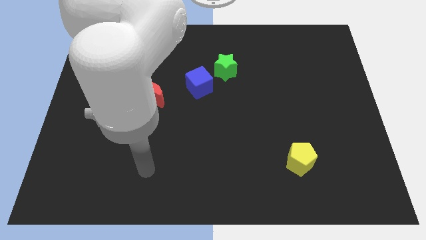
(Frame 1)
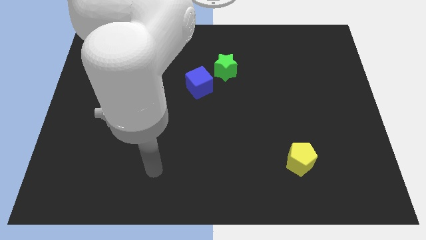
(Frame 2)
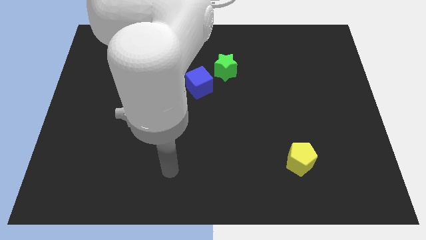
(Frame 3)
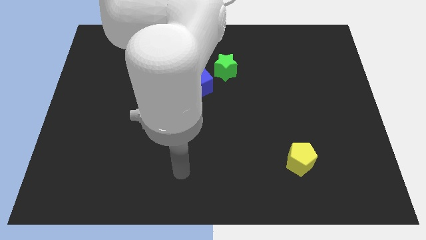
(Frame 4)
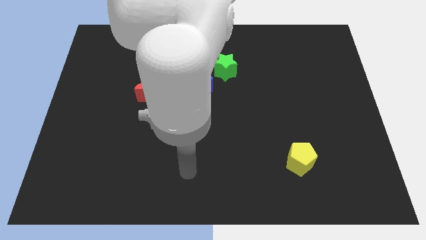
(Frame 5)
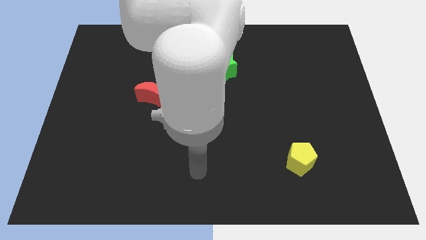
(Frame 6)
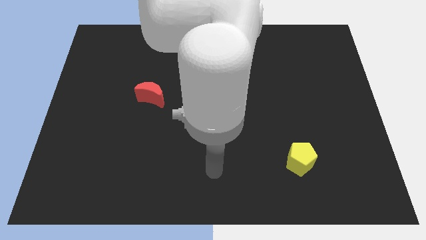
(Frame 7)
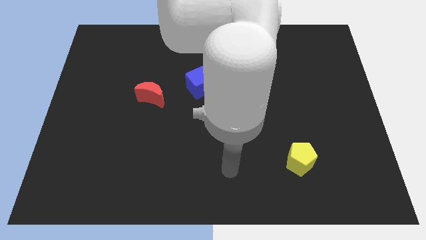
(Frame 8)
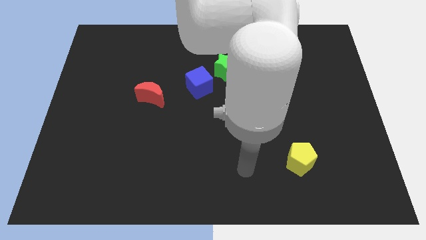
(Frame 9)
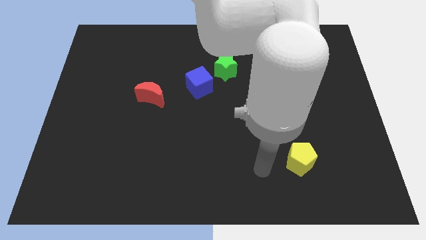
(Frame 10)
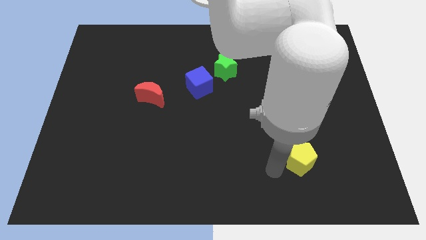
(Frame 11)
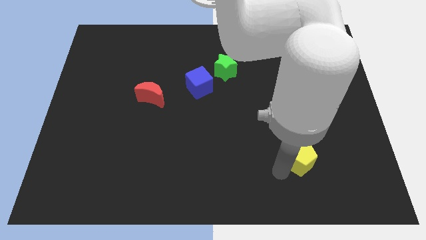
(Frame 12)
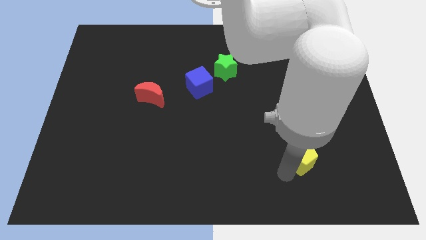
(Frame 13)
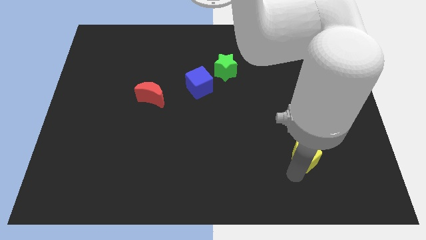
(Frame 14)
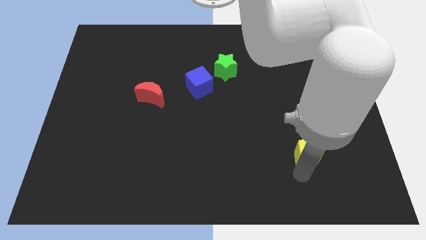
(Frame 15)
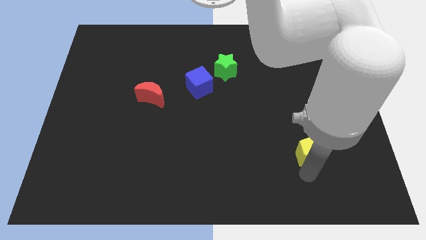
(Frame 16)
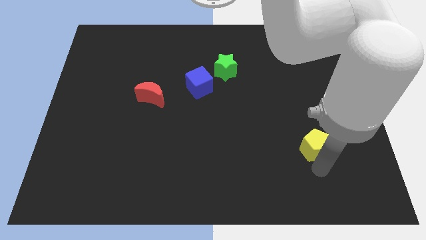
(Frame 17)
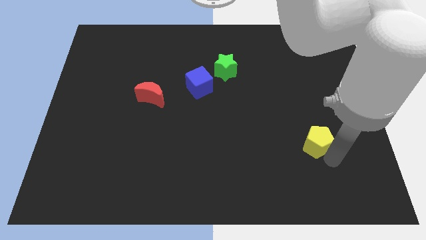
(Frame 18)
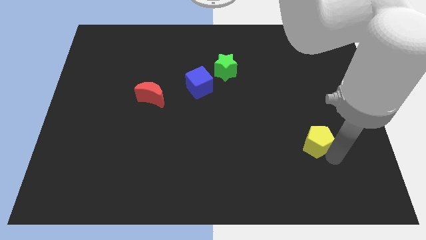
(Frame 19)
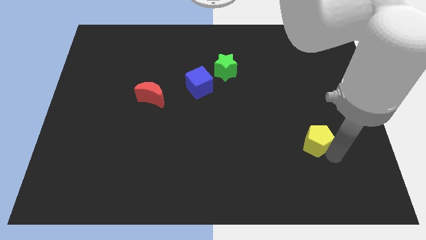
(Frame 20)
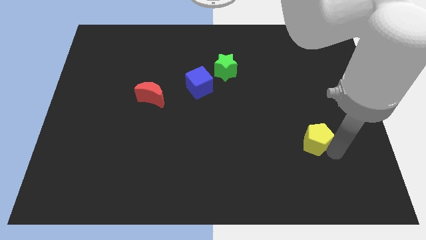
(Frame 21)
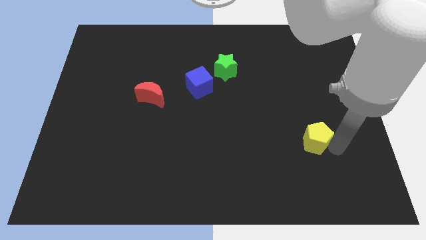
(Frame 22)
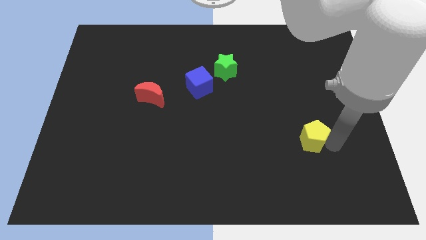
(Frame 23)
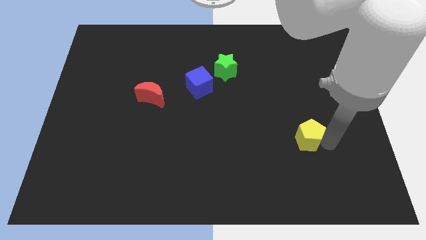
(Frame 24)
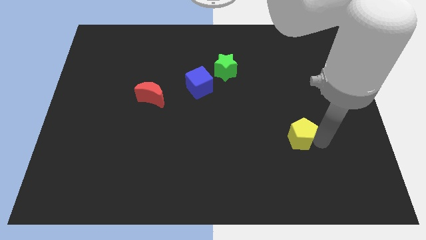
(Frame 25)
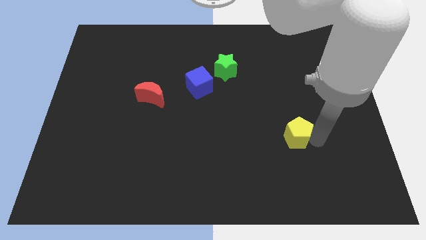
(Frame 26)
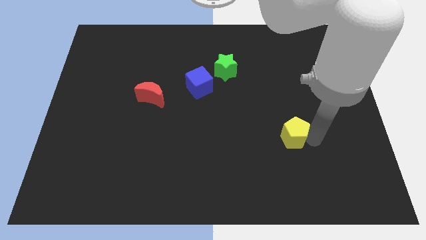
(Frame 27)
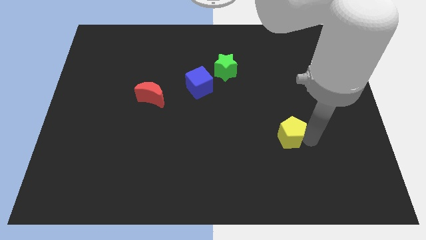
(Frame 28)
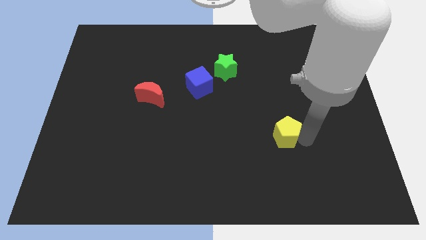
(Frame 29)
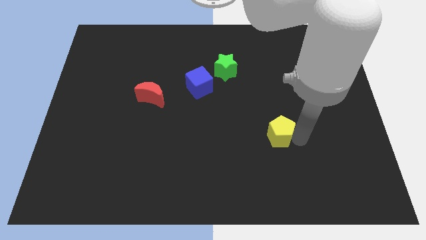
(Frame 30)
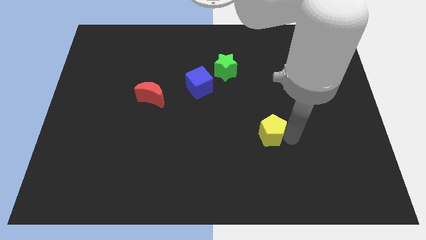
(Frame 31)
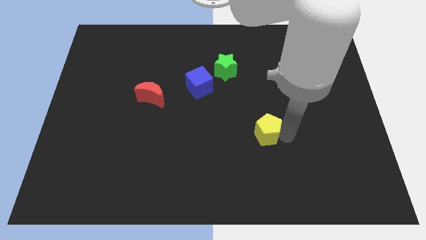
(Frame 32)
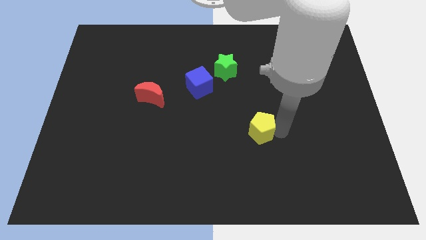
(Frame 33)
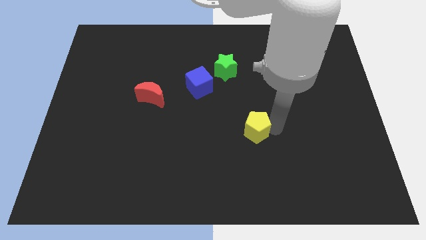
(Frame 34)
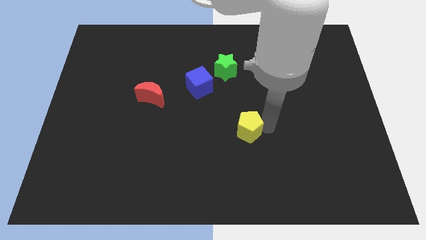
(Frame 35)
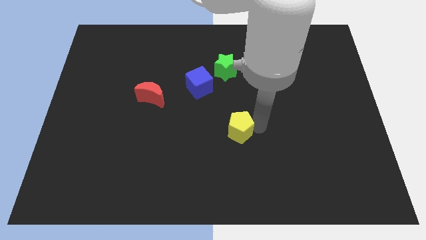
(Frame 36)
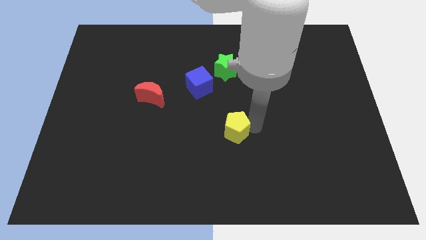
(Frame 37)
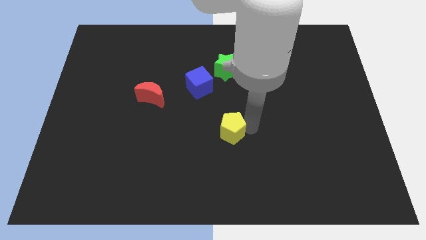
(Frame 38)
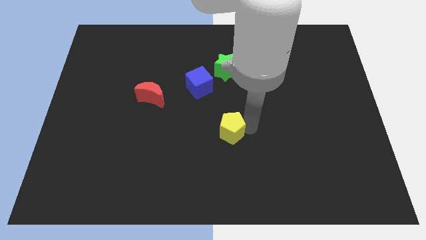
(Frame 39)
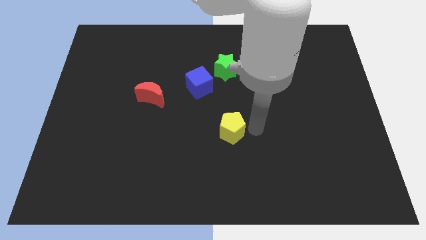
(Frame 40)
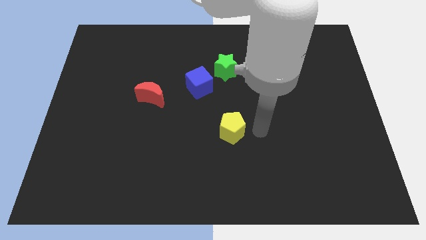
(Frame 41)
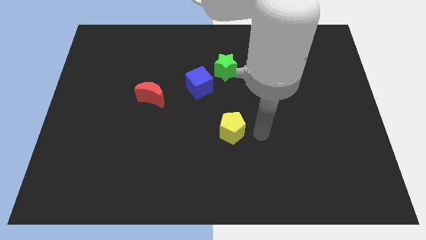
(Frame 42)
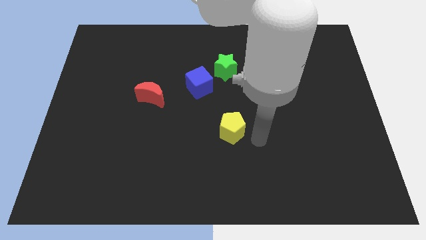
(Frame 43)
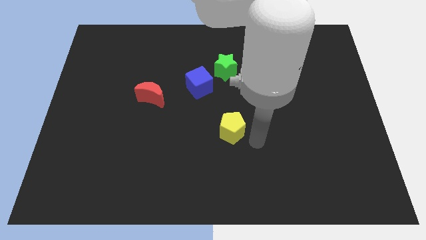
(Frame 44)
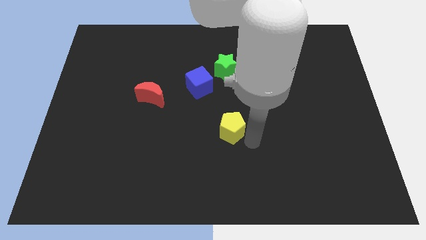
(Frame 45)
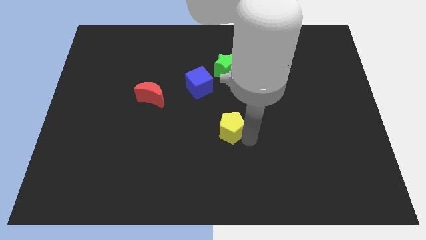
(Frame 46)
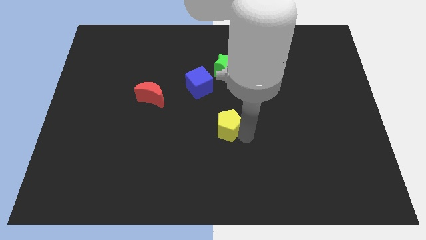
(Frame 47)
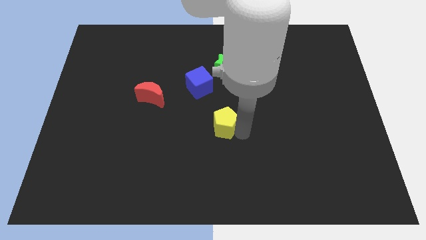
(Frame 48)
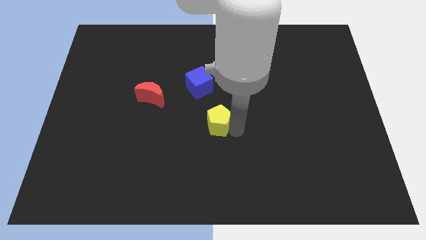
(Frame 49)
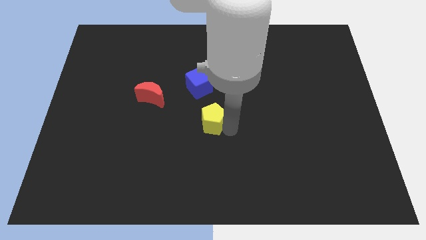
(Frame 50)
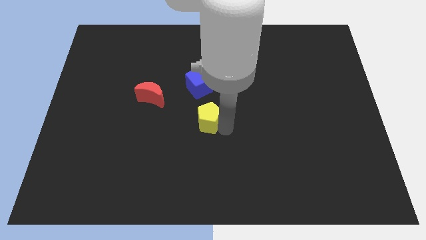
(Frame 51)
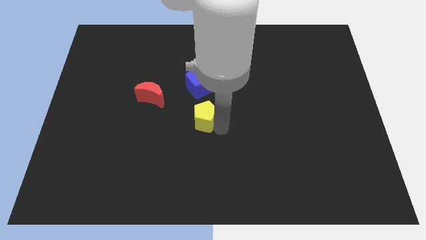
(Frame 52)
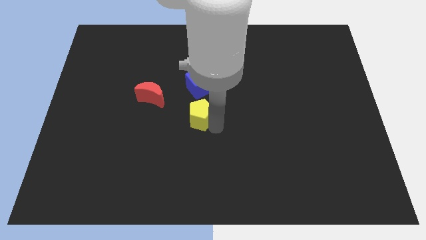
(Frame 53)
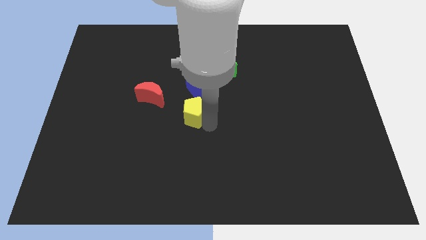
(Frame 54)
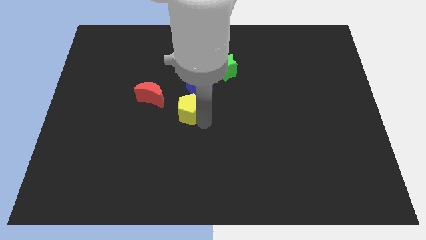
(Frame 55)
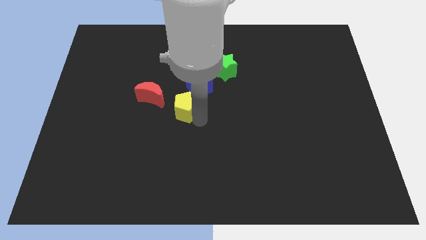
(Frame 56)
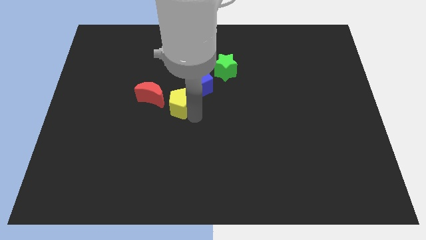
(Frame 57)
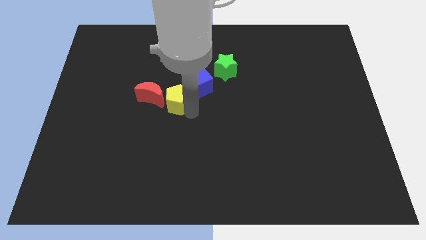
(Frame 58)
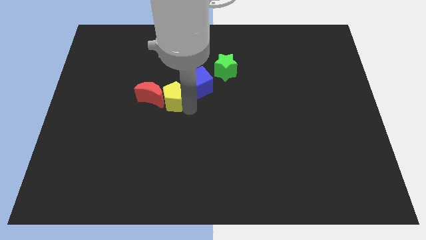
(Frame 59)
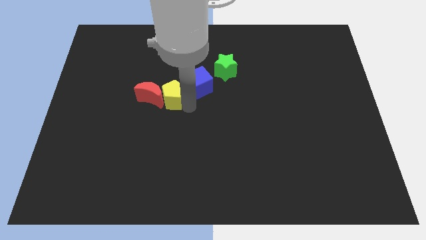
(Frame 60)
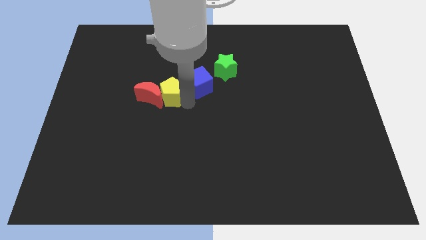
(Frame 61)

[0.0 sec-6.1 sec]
slide the yellow pentagon to the red block

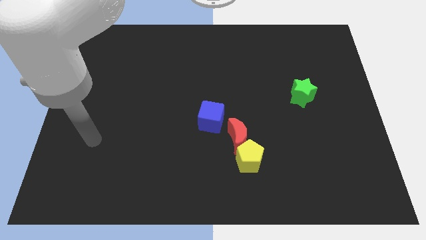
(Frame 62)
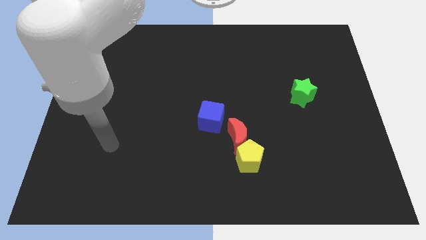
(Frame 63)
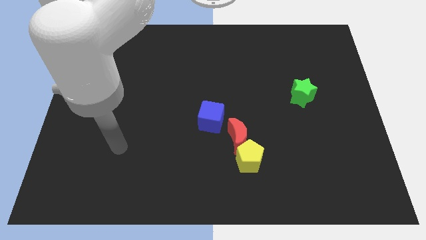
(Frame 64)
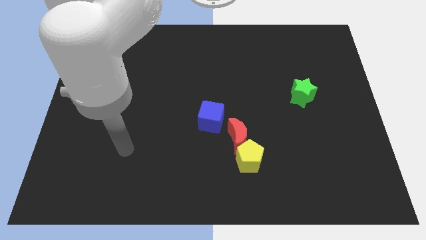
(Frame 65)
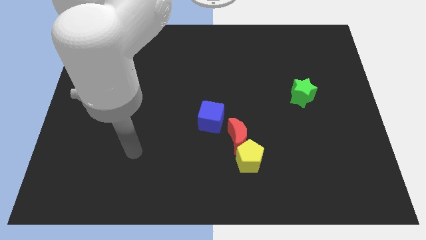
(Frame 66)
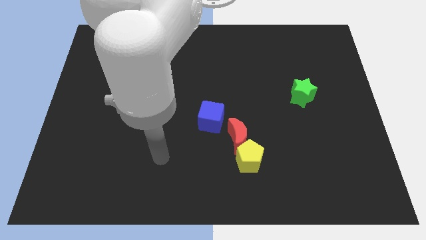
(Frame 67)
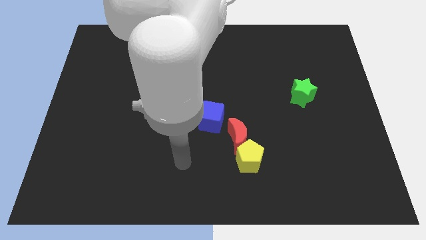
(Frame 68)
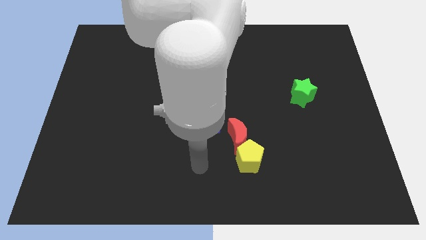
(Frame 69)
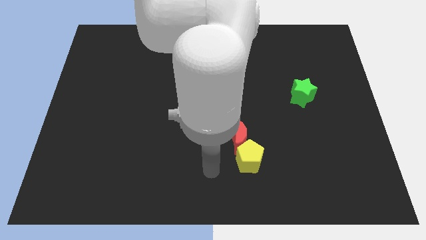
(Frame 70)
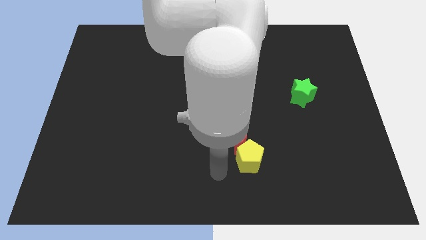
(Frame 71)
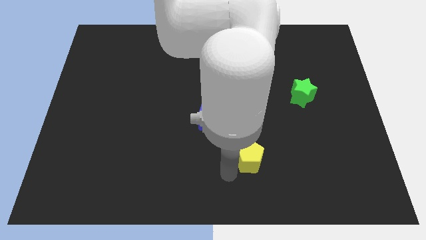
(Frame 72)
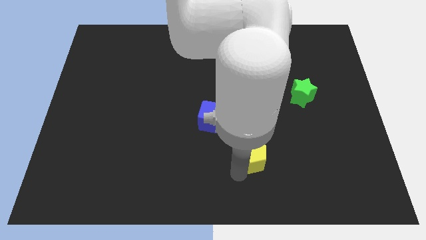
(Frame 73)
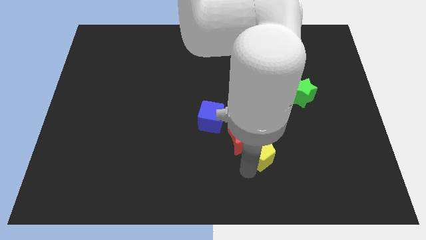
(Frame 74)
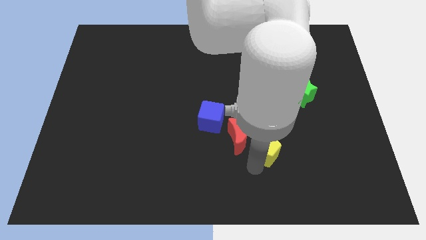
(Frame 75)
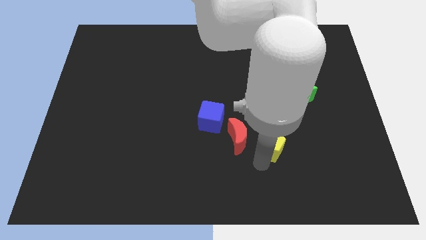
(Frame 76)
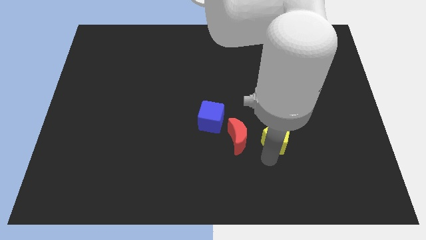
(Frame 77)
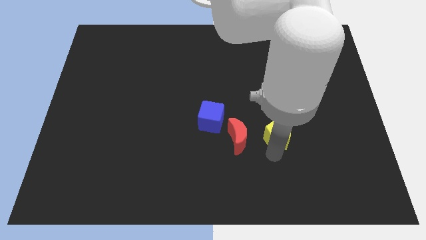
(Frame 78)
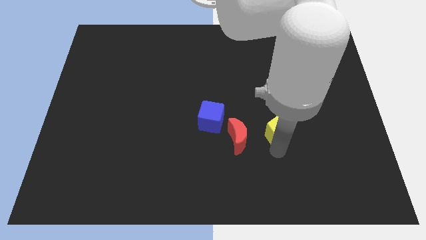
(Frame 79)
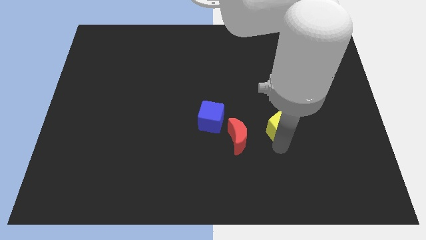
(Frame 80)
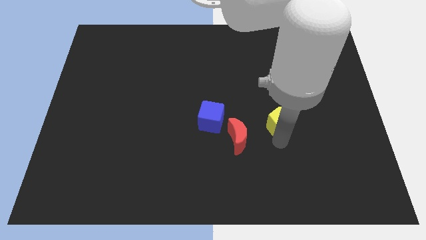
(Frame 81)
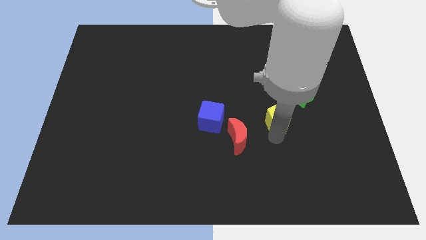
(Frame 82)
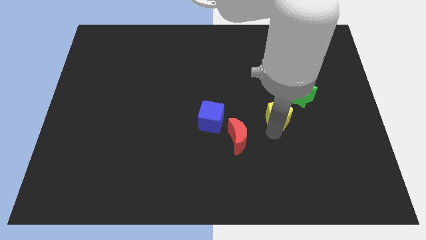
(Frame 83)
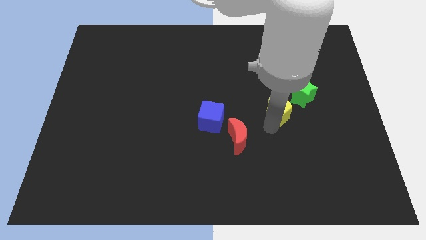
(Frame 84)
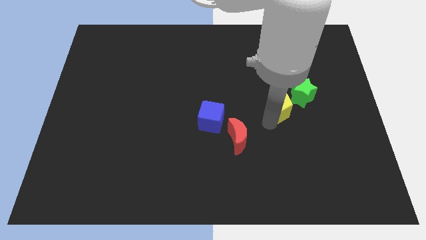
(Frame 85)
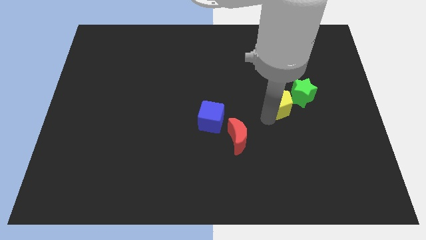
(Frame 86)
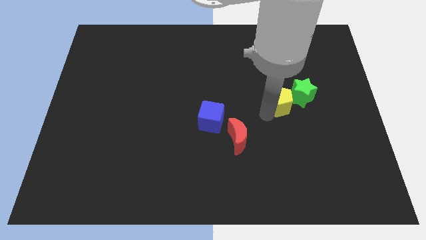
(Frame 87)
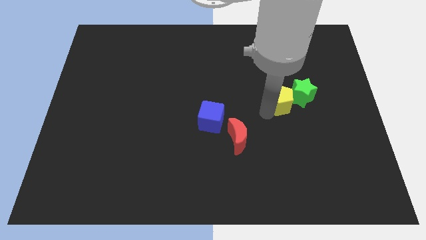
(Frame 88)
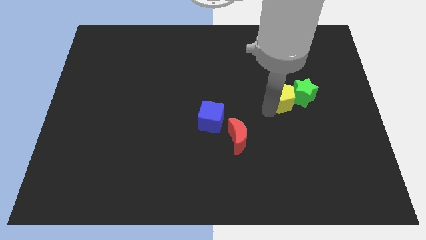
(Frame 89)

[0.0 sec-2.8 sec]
put the pentagon close to the green block
